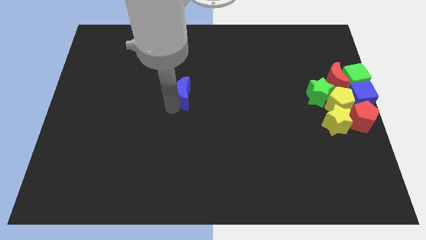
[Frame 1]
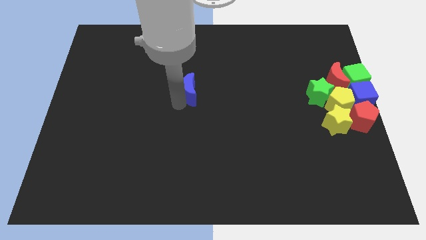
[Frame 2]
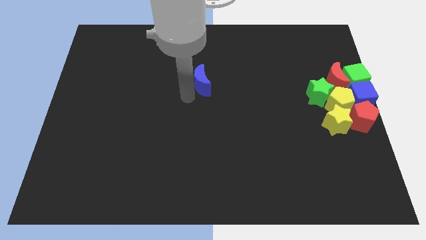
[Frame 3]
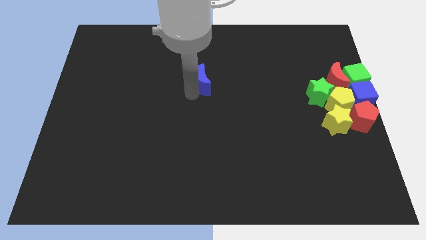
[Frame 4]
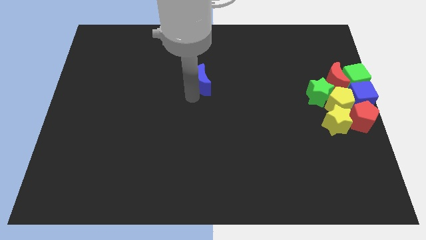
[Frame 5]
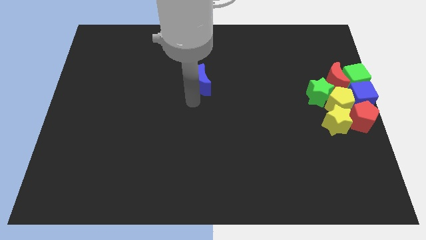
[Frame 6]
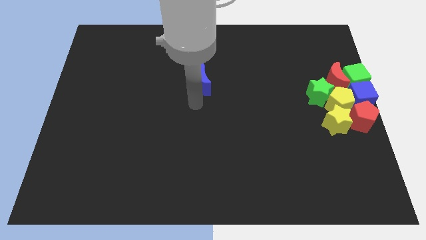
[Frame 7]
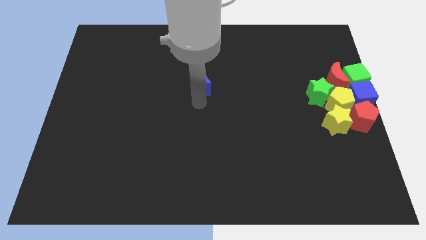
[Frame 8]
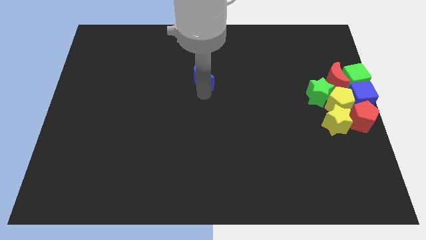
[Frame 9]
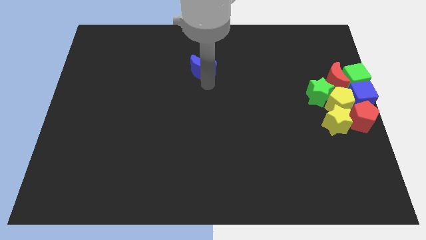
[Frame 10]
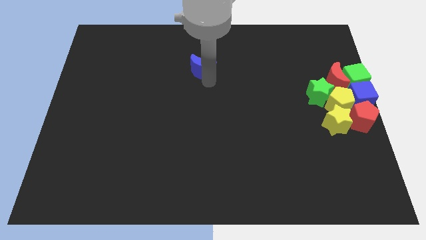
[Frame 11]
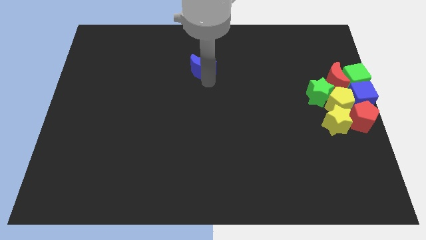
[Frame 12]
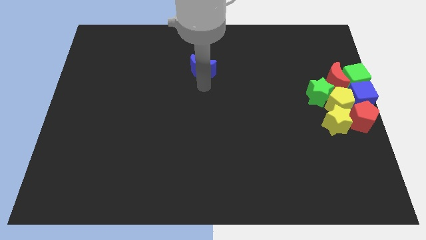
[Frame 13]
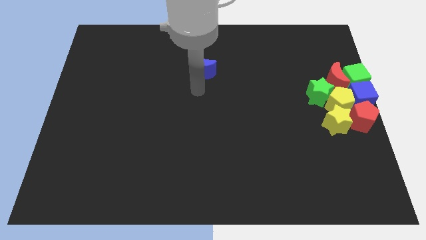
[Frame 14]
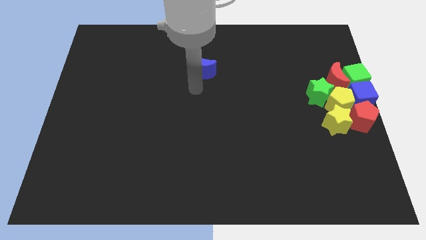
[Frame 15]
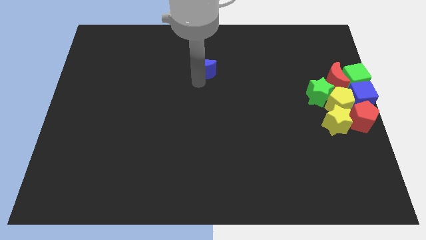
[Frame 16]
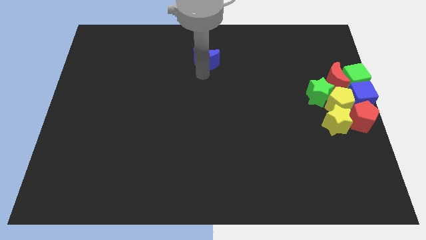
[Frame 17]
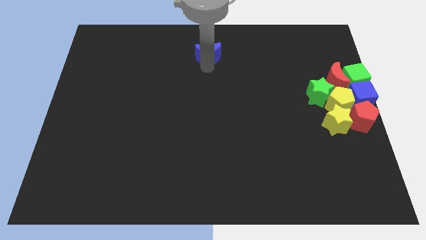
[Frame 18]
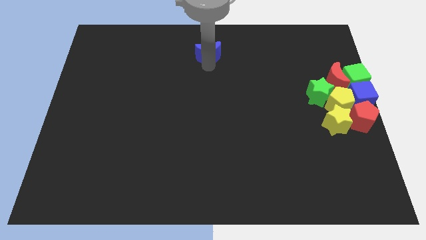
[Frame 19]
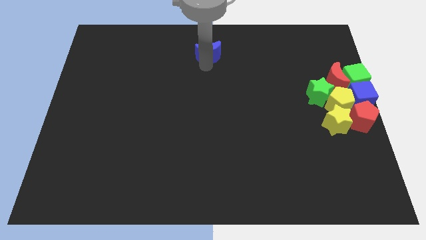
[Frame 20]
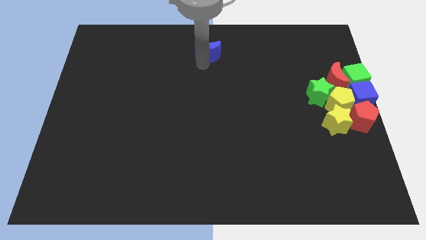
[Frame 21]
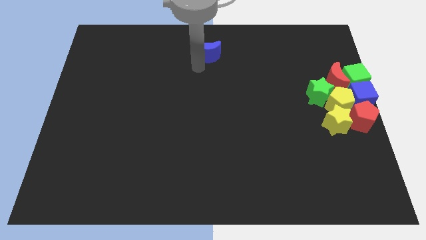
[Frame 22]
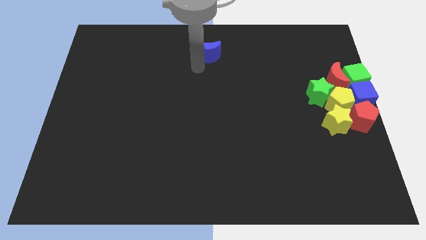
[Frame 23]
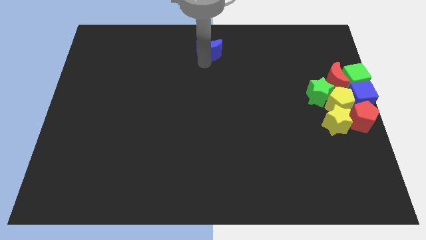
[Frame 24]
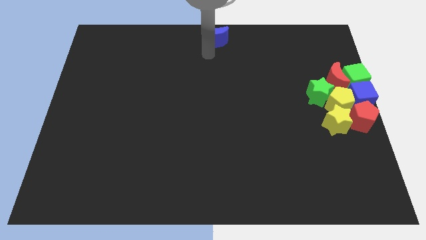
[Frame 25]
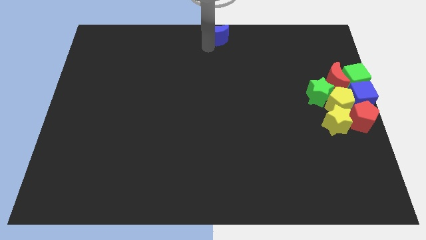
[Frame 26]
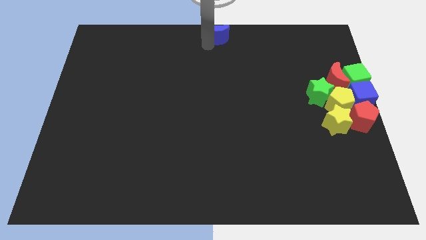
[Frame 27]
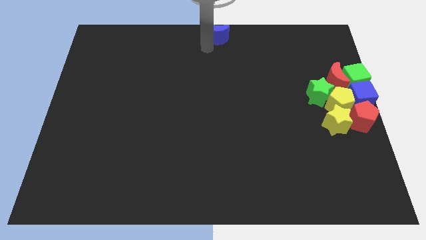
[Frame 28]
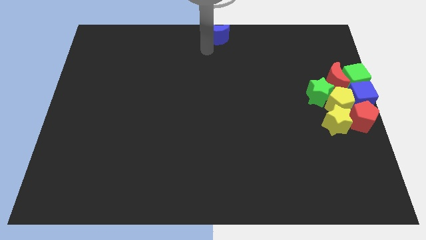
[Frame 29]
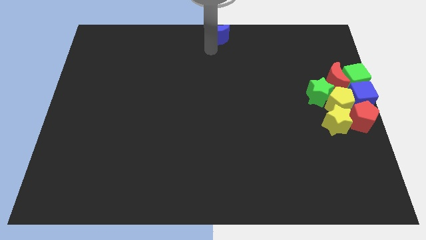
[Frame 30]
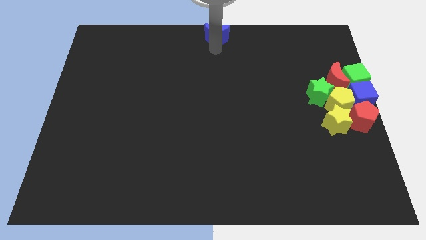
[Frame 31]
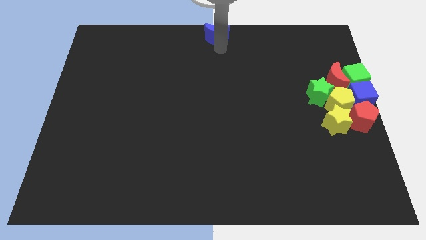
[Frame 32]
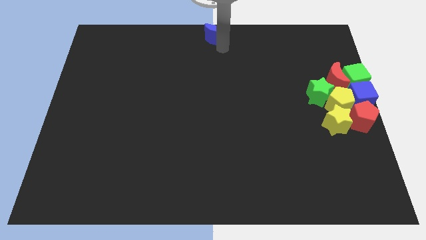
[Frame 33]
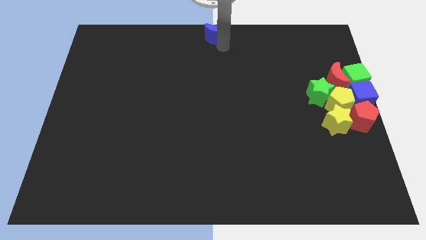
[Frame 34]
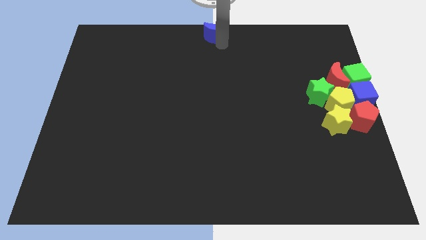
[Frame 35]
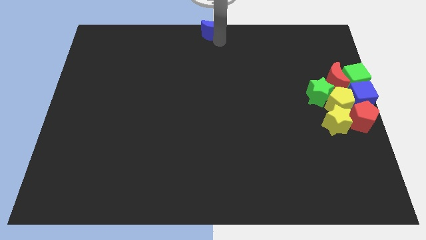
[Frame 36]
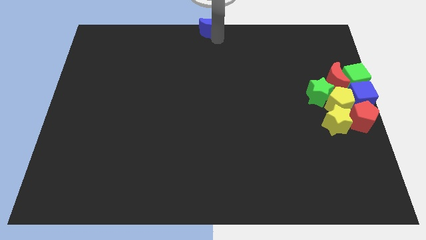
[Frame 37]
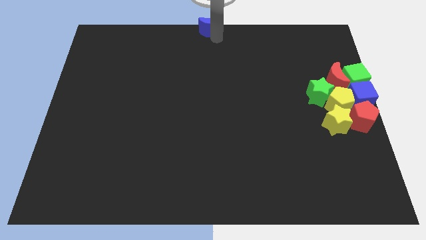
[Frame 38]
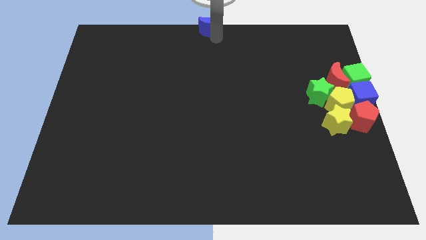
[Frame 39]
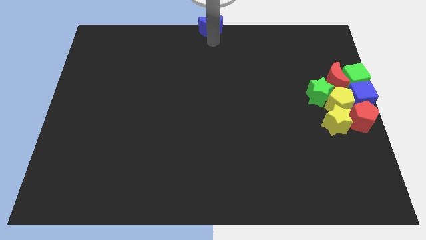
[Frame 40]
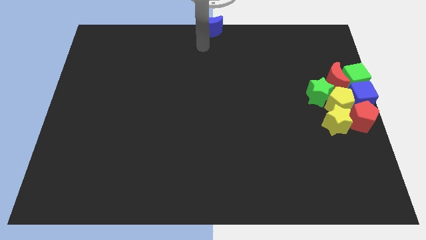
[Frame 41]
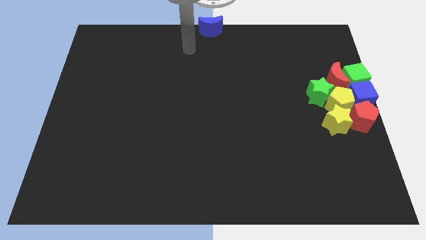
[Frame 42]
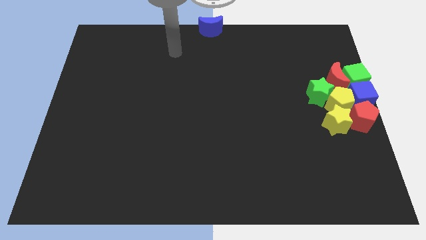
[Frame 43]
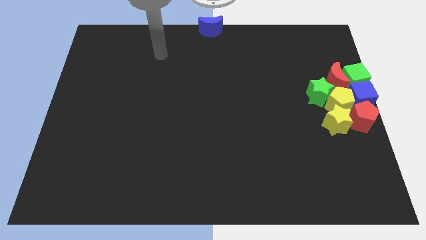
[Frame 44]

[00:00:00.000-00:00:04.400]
push the blue moon towards the top center of the board

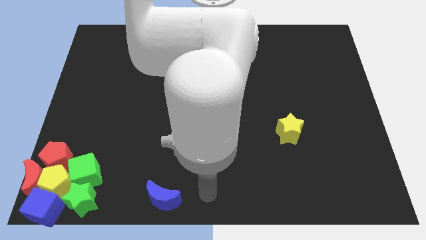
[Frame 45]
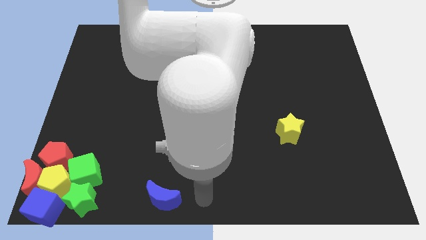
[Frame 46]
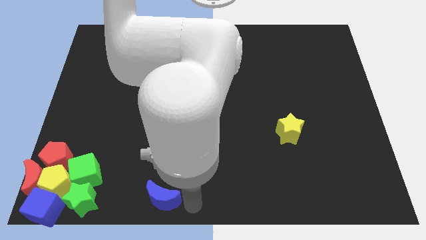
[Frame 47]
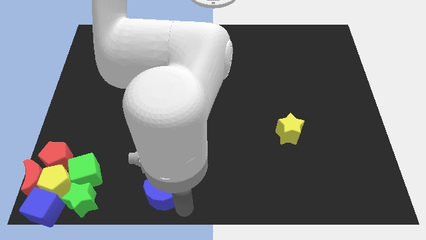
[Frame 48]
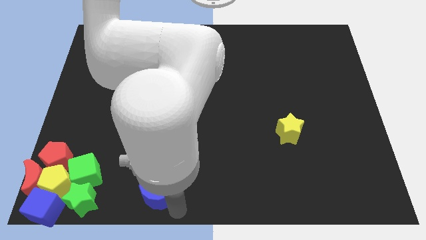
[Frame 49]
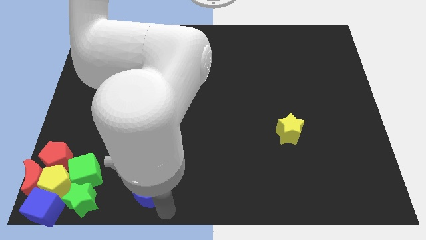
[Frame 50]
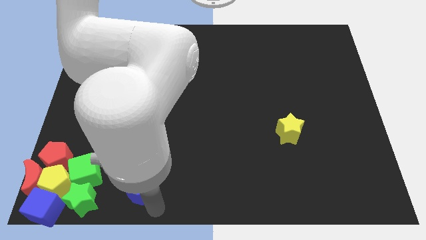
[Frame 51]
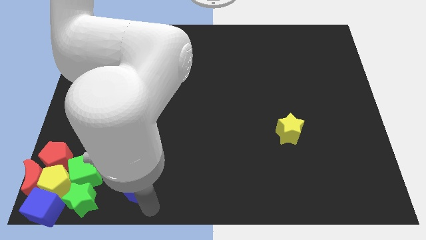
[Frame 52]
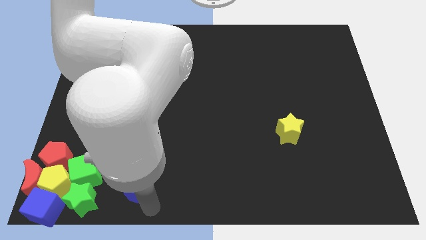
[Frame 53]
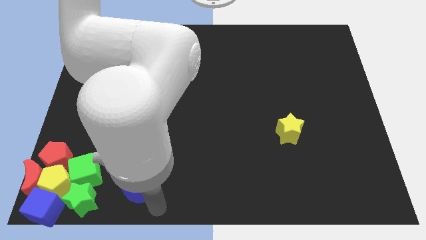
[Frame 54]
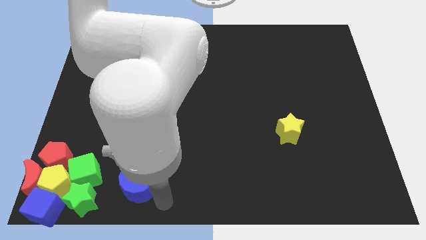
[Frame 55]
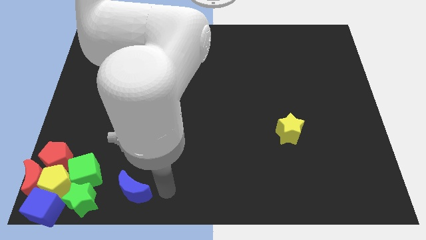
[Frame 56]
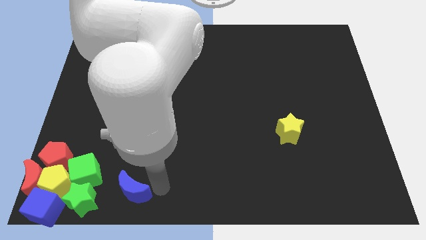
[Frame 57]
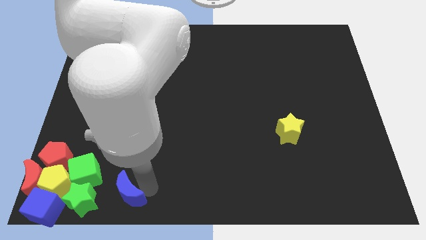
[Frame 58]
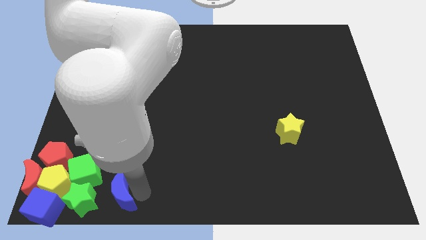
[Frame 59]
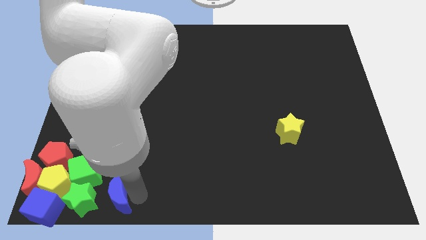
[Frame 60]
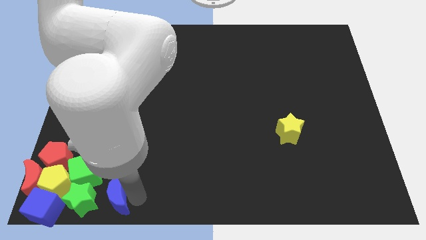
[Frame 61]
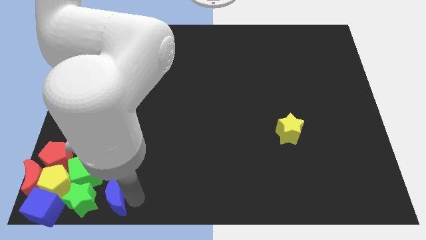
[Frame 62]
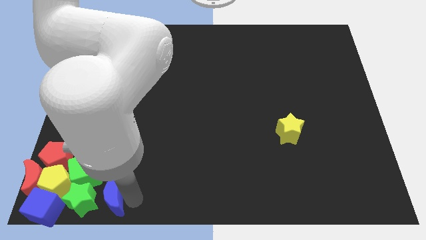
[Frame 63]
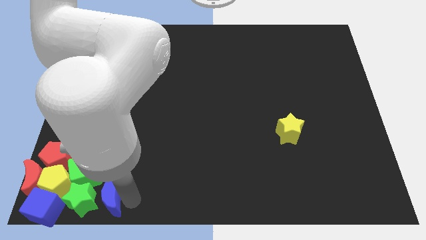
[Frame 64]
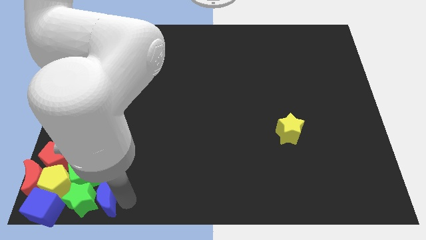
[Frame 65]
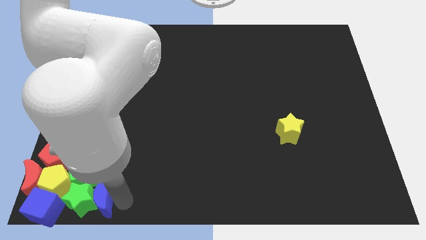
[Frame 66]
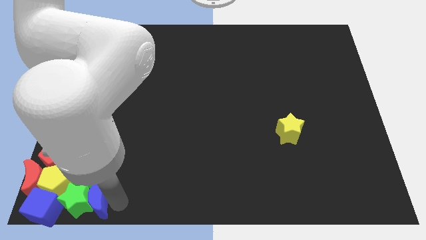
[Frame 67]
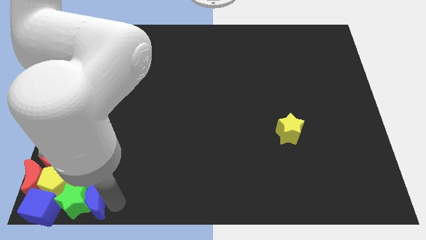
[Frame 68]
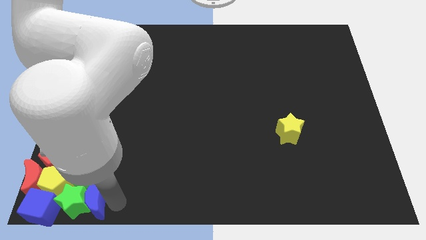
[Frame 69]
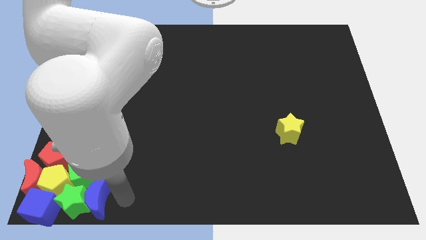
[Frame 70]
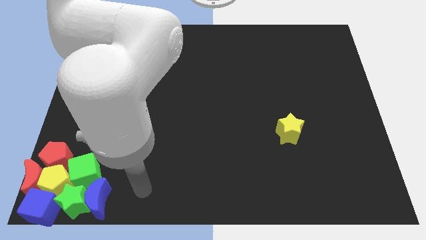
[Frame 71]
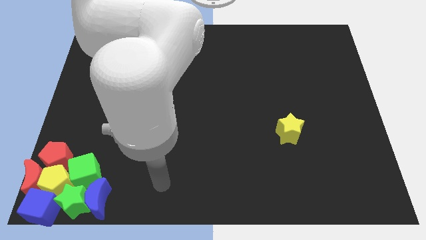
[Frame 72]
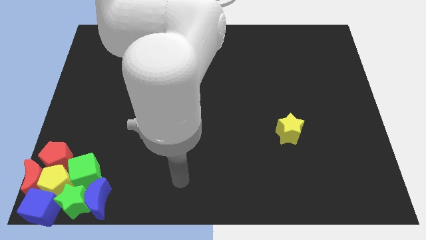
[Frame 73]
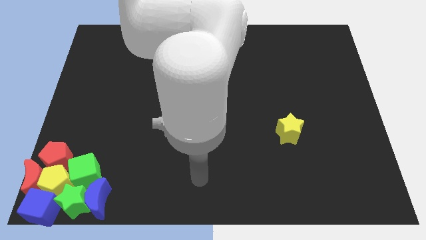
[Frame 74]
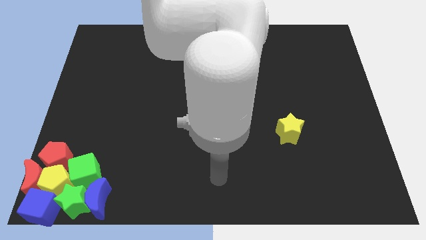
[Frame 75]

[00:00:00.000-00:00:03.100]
move the blue crescent into the green star

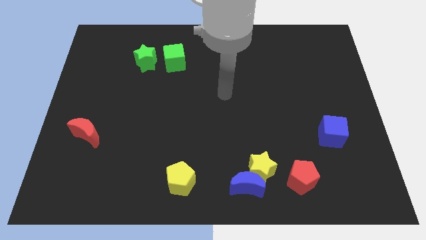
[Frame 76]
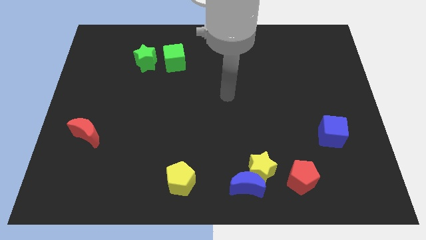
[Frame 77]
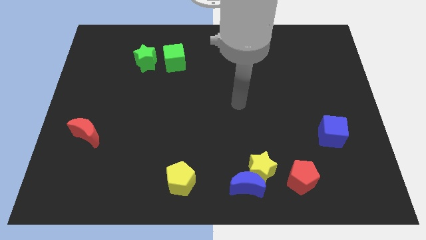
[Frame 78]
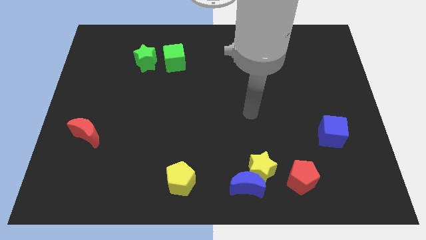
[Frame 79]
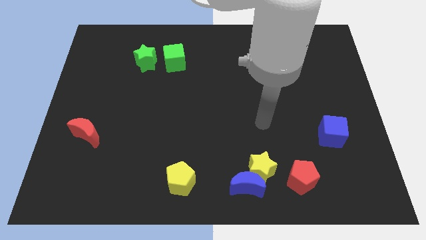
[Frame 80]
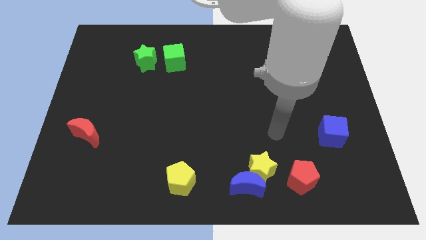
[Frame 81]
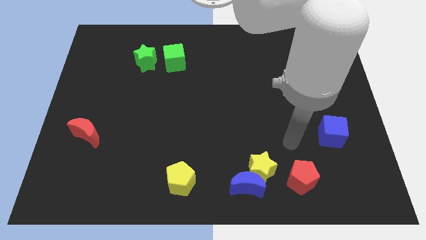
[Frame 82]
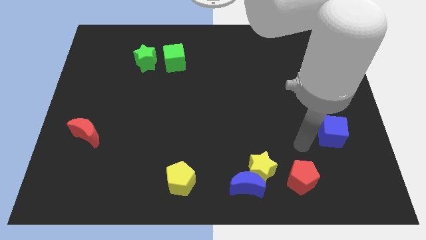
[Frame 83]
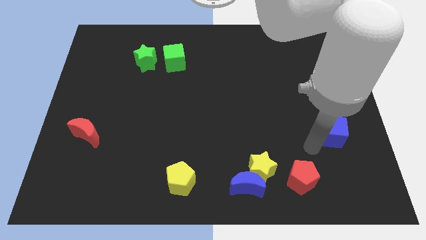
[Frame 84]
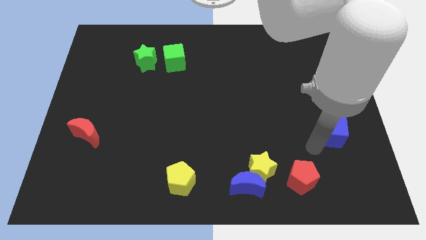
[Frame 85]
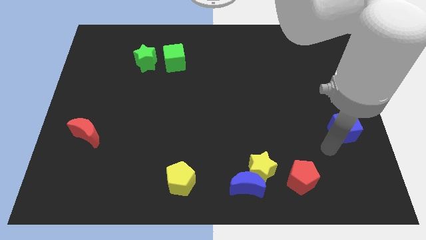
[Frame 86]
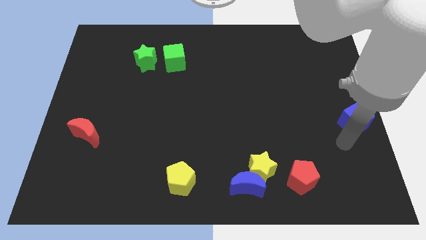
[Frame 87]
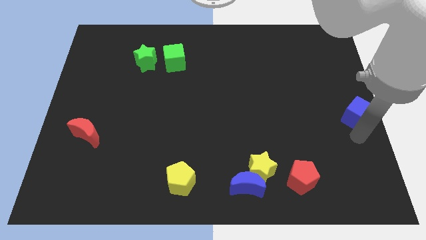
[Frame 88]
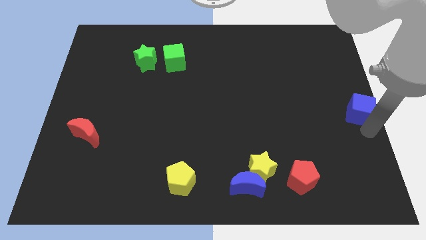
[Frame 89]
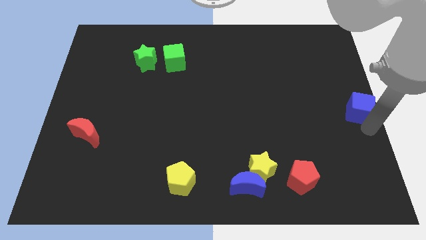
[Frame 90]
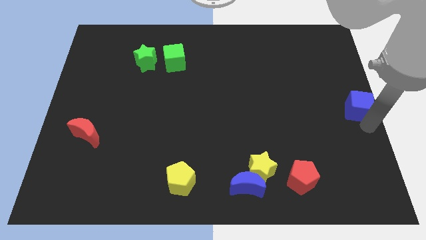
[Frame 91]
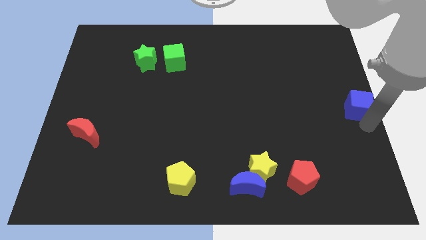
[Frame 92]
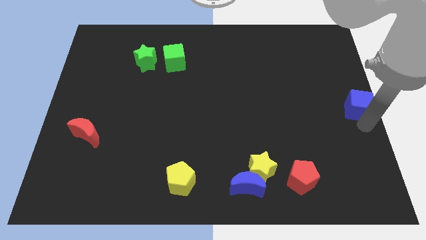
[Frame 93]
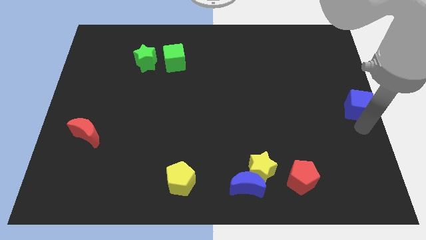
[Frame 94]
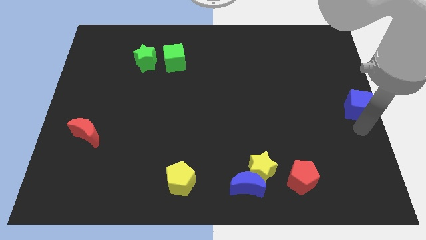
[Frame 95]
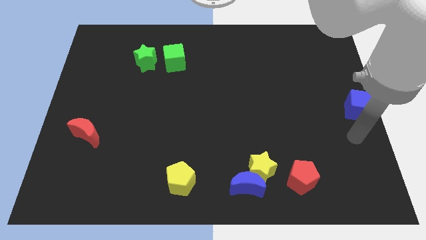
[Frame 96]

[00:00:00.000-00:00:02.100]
place the blue cube at the center right side of the board
